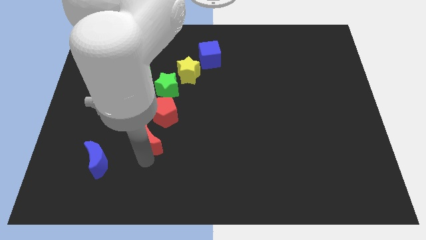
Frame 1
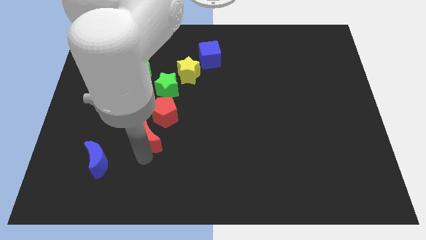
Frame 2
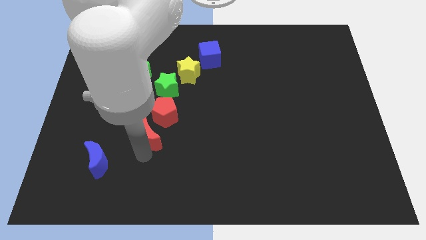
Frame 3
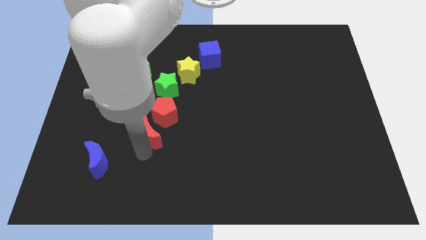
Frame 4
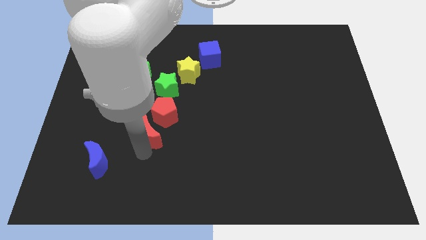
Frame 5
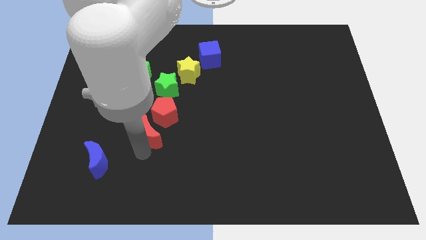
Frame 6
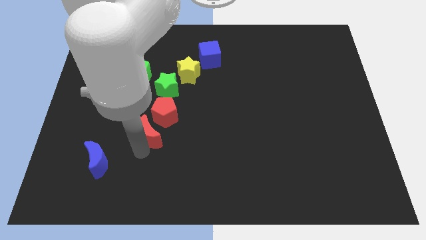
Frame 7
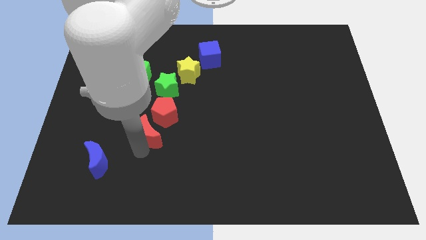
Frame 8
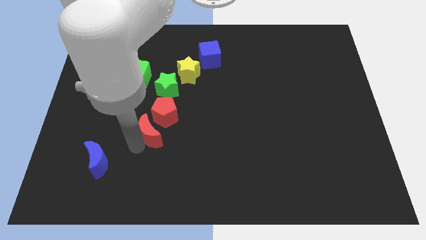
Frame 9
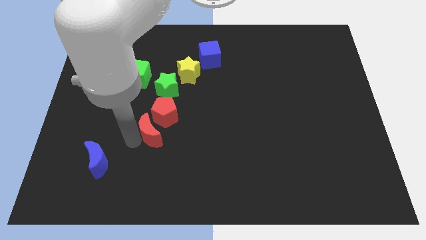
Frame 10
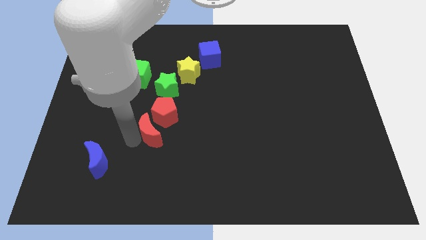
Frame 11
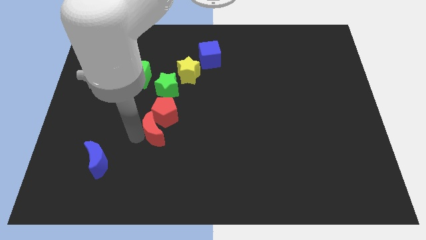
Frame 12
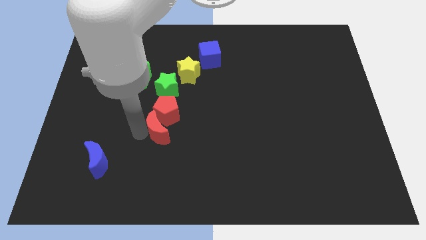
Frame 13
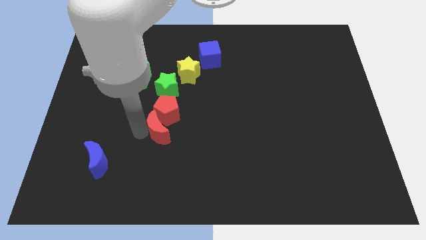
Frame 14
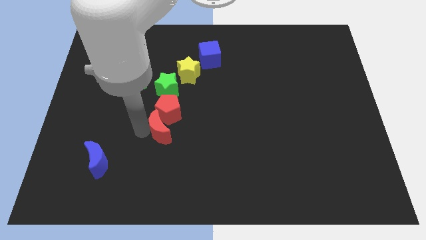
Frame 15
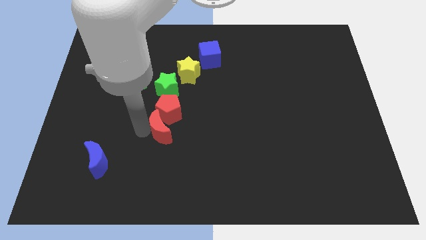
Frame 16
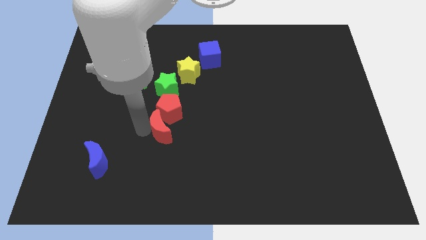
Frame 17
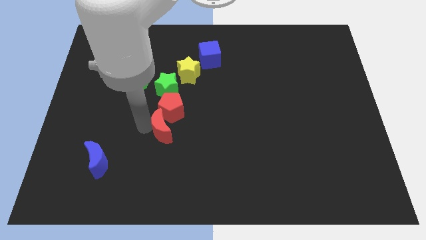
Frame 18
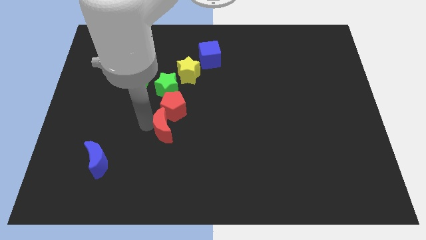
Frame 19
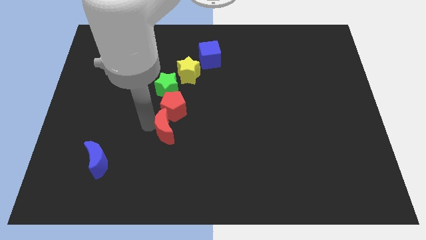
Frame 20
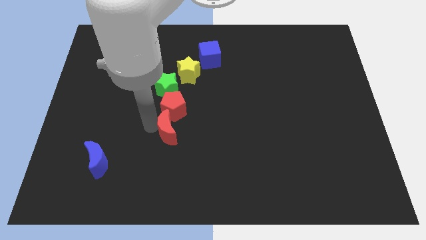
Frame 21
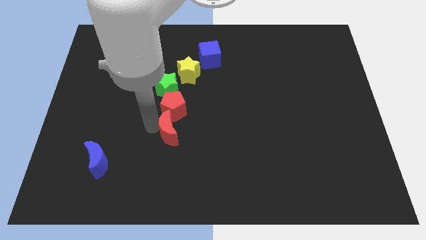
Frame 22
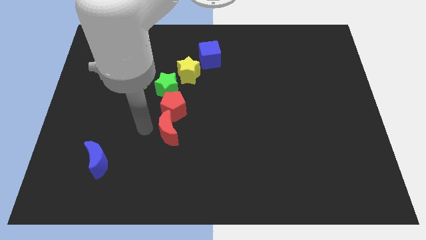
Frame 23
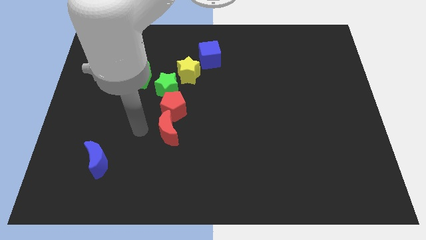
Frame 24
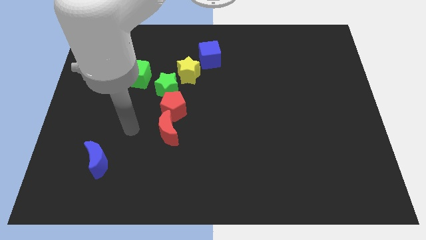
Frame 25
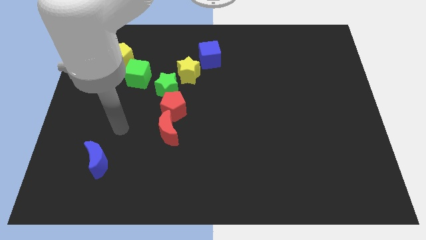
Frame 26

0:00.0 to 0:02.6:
place the red blocks below the green star vertically one by one

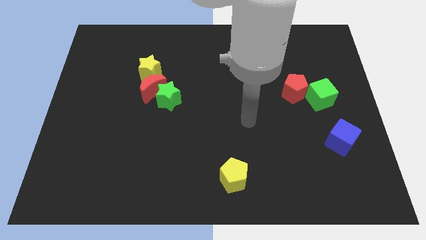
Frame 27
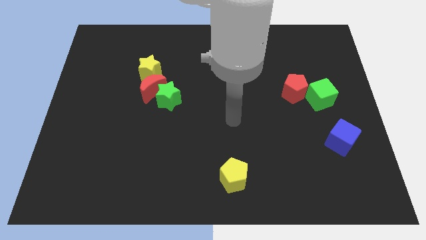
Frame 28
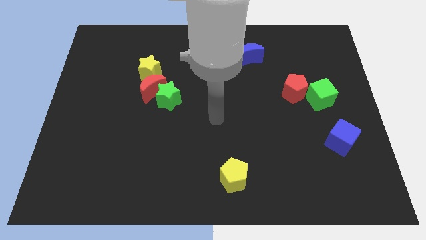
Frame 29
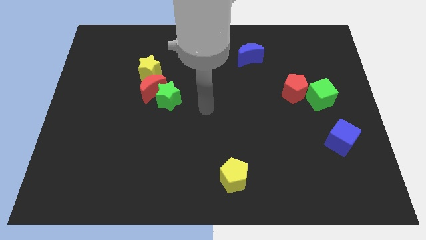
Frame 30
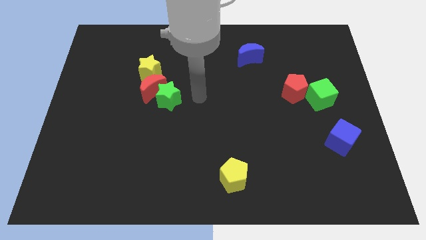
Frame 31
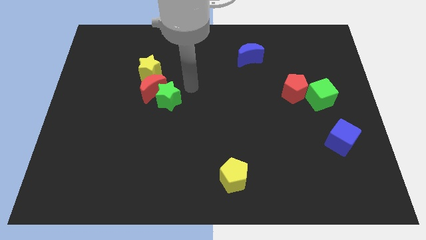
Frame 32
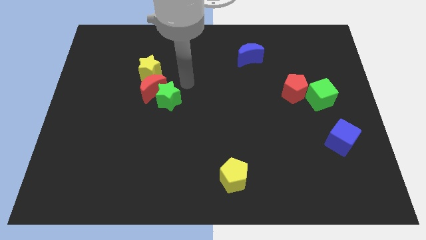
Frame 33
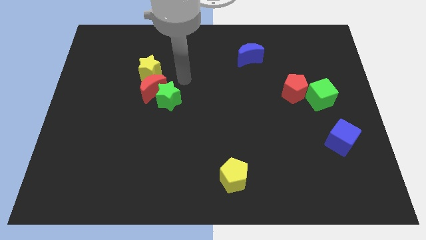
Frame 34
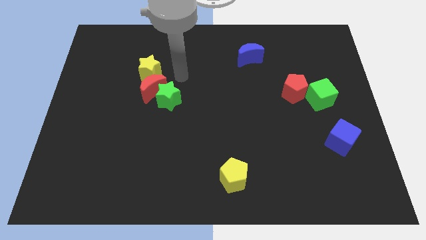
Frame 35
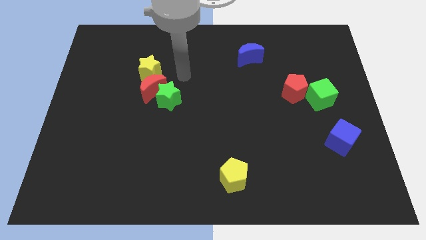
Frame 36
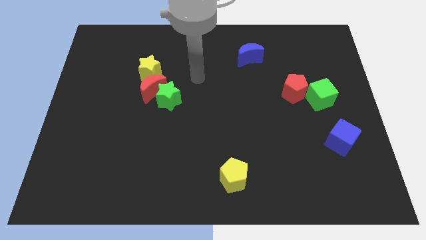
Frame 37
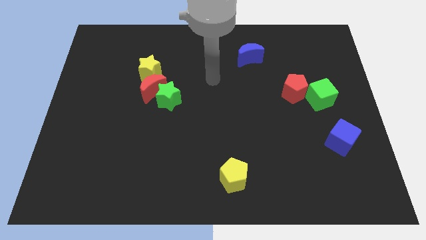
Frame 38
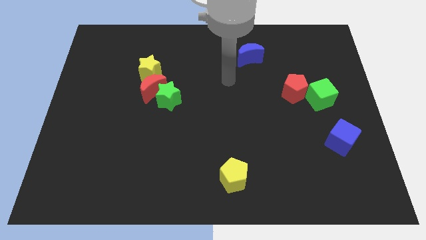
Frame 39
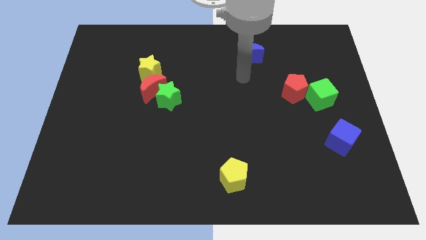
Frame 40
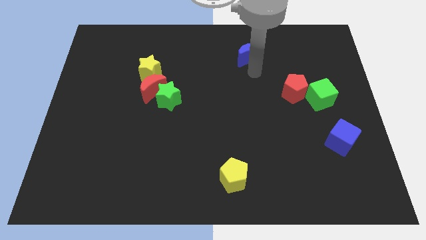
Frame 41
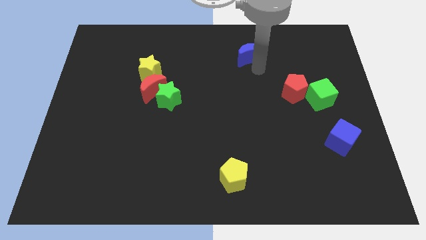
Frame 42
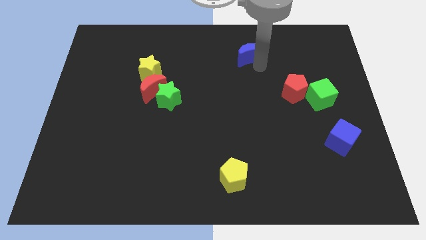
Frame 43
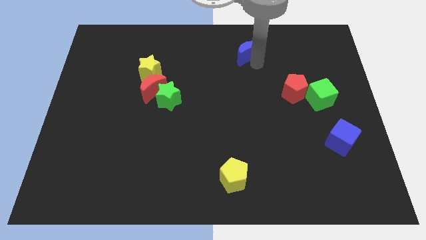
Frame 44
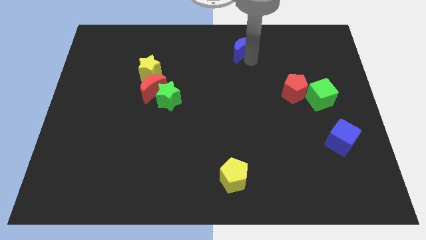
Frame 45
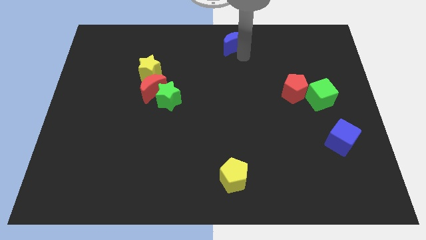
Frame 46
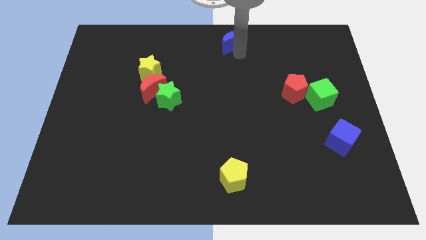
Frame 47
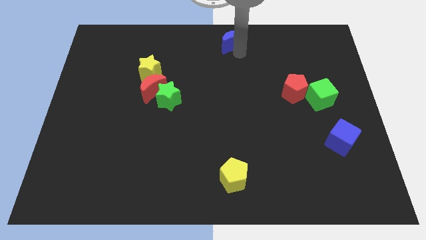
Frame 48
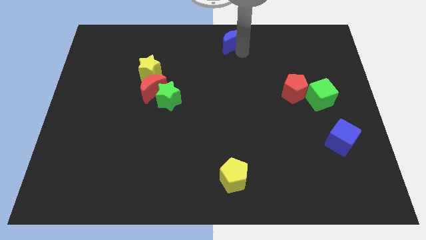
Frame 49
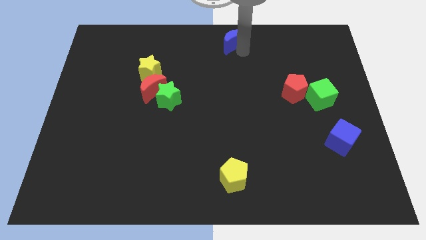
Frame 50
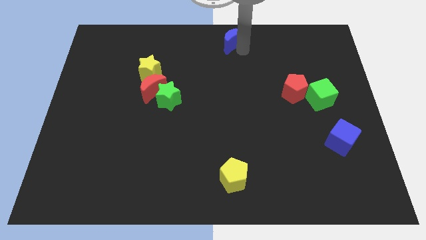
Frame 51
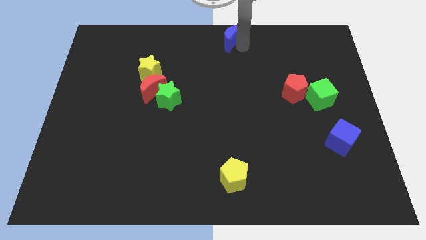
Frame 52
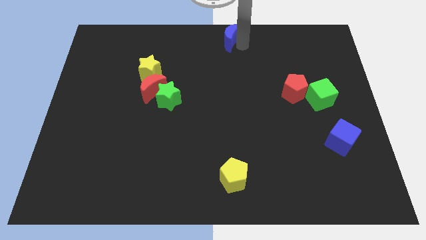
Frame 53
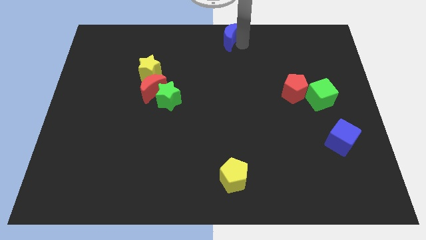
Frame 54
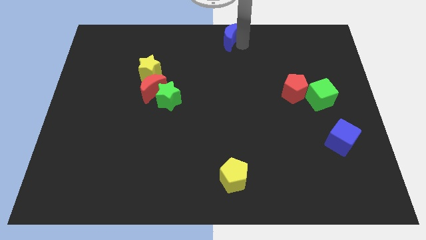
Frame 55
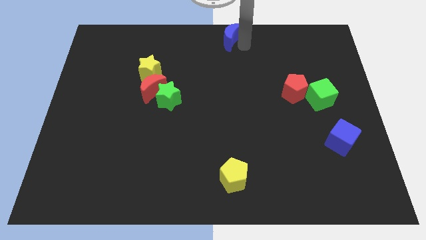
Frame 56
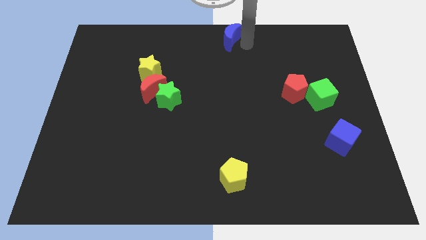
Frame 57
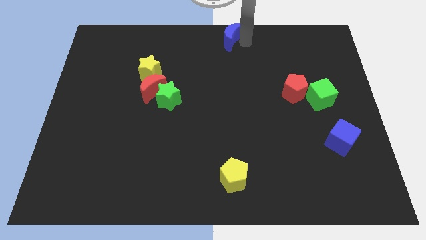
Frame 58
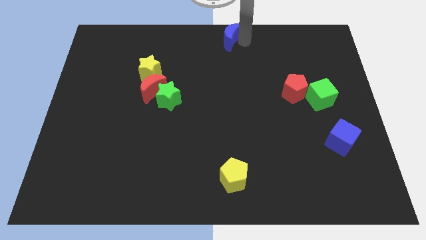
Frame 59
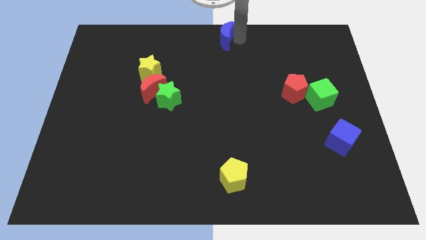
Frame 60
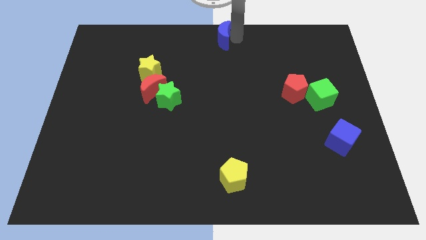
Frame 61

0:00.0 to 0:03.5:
push the blue moon to the center top of the board

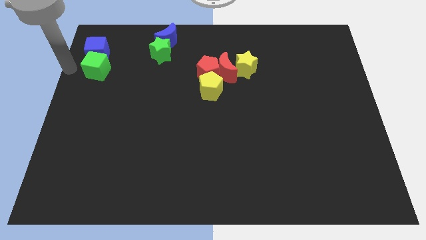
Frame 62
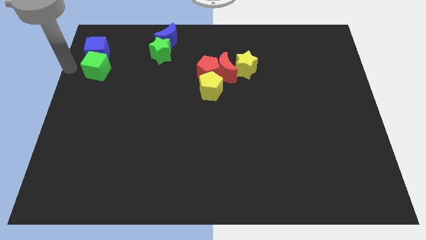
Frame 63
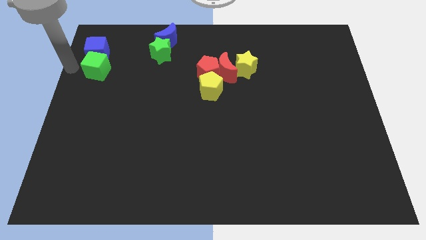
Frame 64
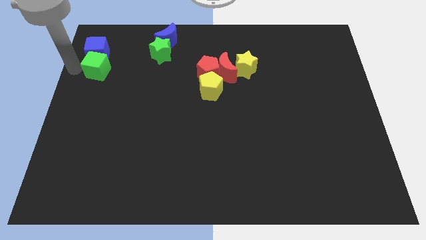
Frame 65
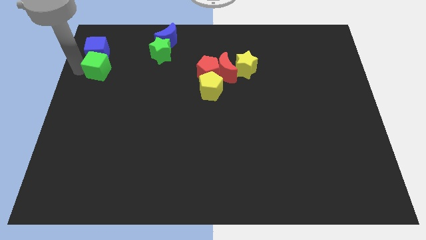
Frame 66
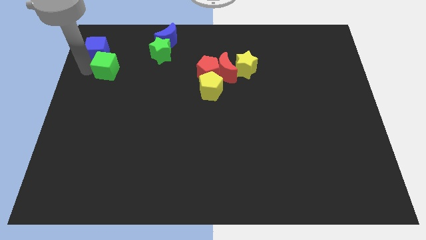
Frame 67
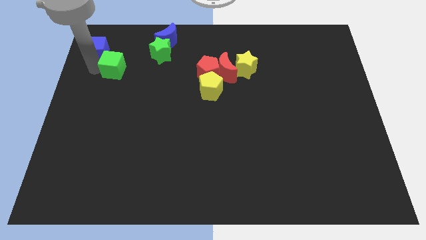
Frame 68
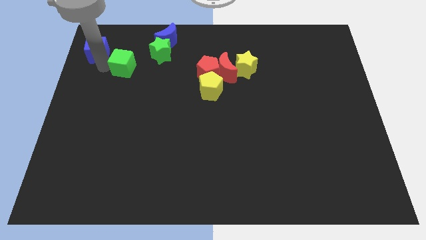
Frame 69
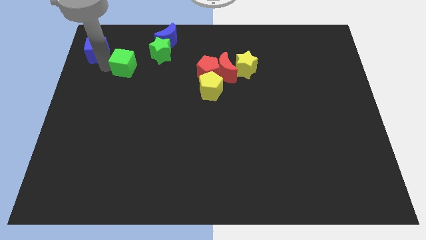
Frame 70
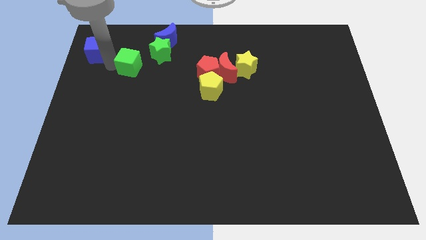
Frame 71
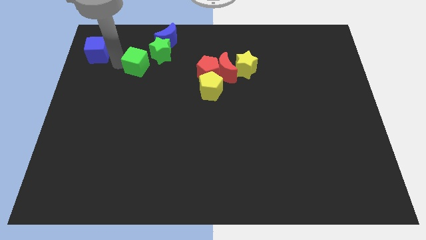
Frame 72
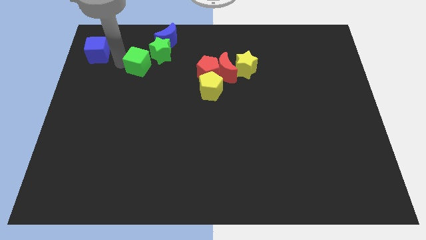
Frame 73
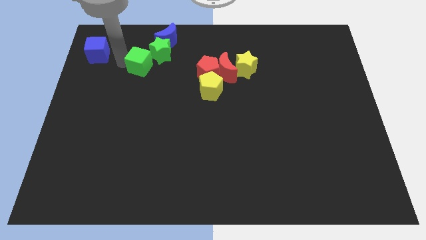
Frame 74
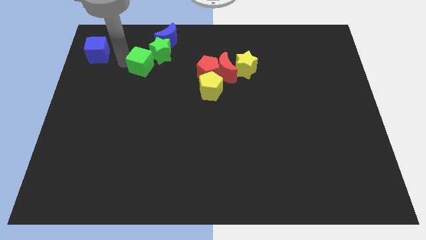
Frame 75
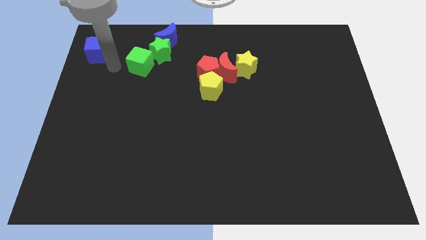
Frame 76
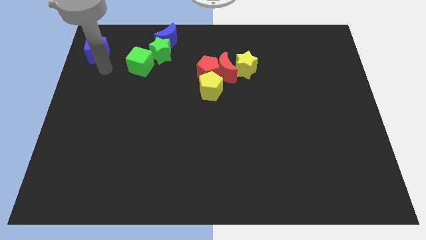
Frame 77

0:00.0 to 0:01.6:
separate the cubes

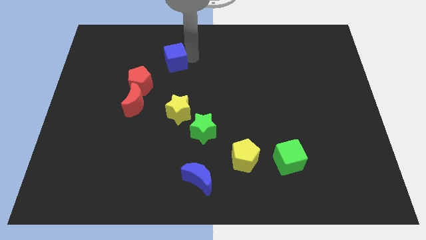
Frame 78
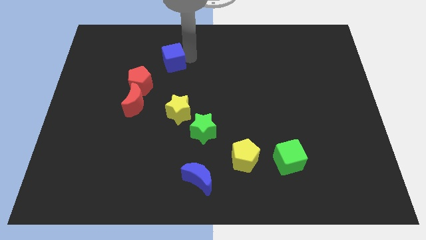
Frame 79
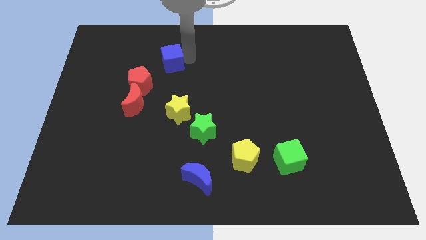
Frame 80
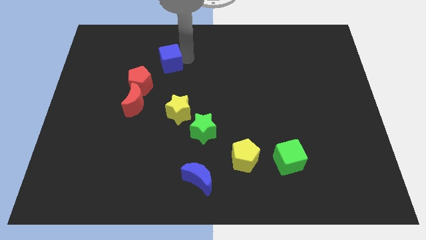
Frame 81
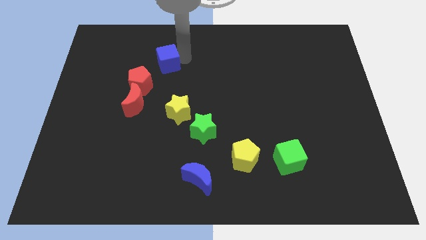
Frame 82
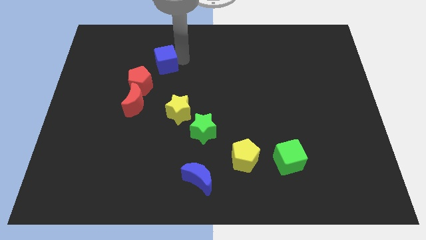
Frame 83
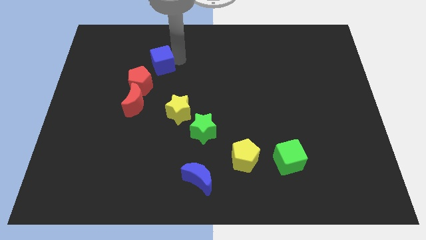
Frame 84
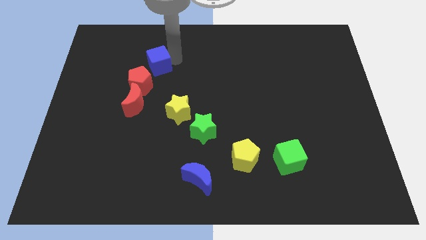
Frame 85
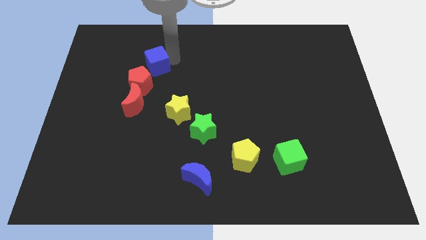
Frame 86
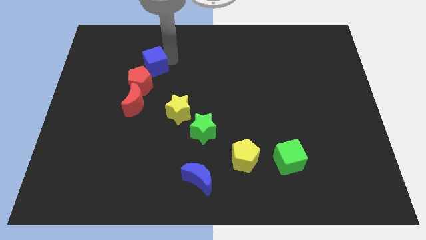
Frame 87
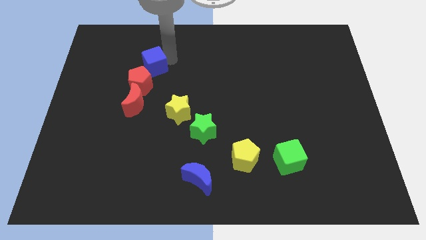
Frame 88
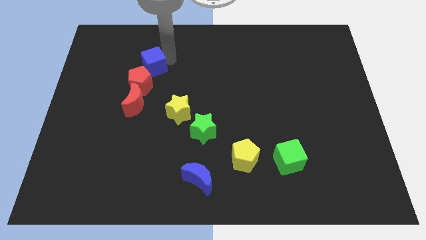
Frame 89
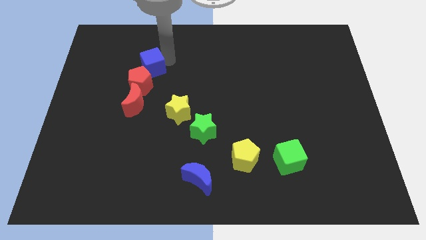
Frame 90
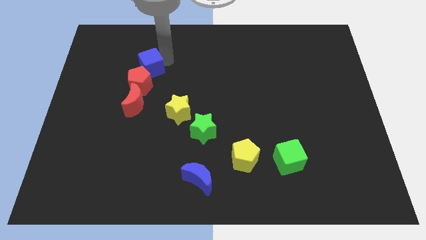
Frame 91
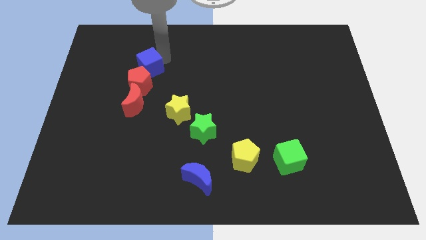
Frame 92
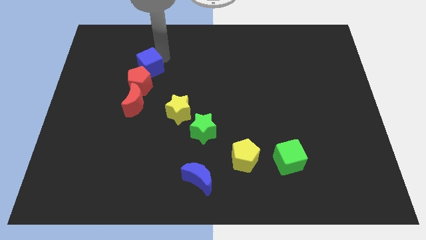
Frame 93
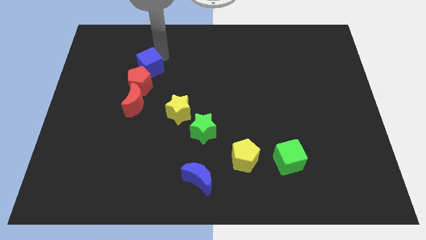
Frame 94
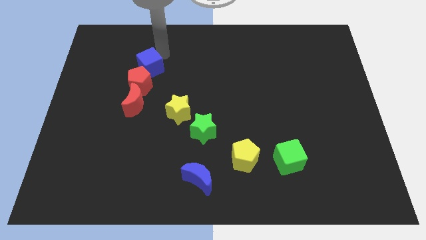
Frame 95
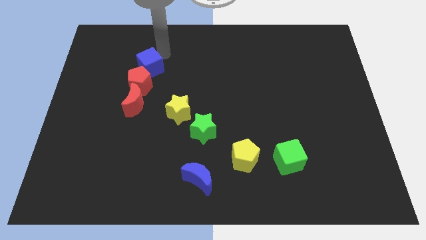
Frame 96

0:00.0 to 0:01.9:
push the blue cube into the top side of the red pentagon
